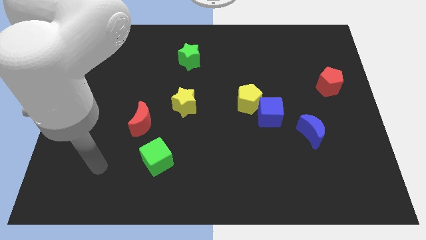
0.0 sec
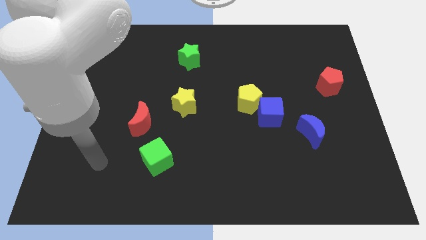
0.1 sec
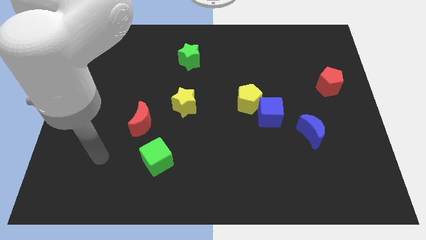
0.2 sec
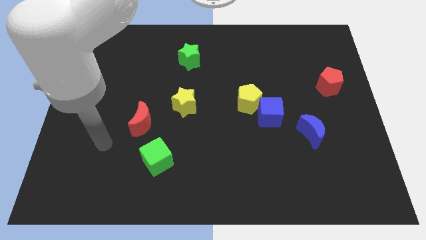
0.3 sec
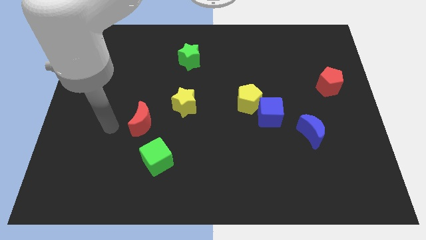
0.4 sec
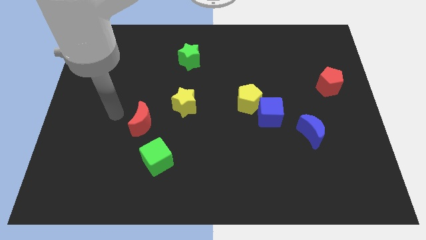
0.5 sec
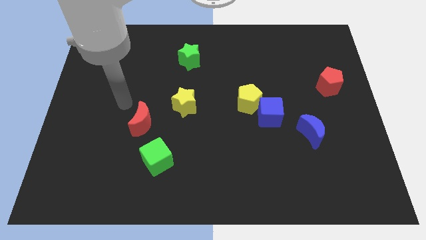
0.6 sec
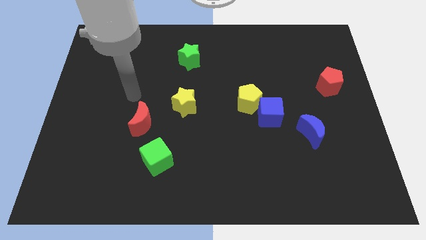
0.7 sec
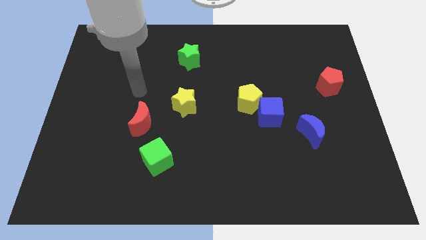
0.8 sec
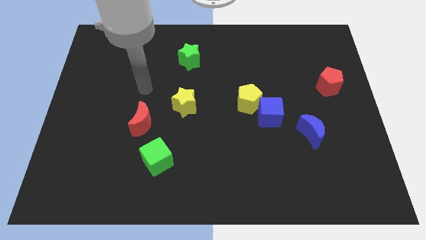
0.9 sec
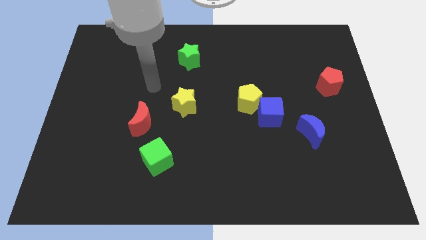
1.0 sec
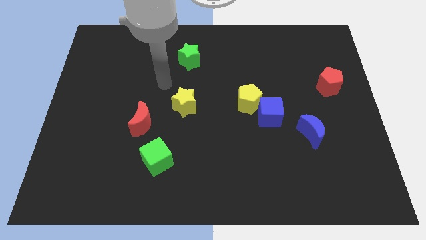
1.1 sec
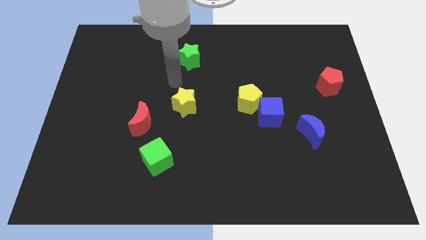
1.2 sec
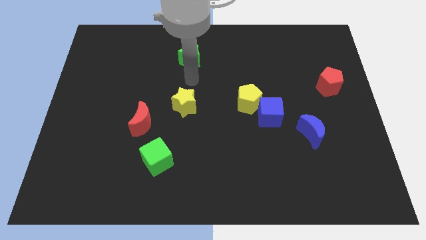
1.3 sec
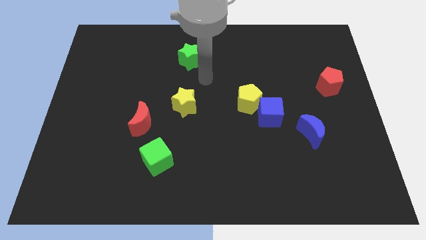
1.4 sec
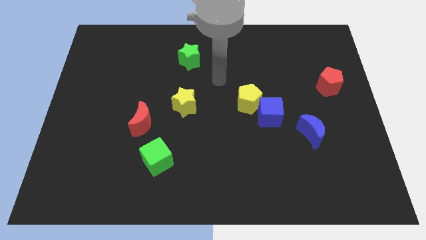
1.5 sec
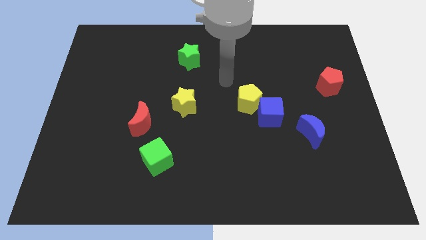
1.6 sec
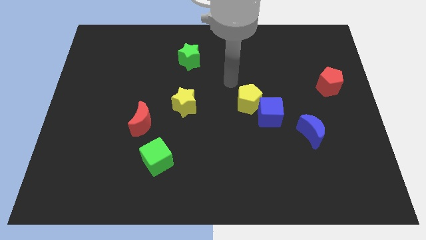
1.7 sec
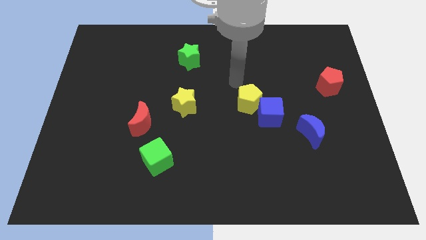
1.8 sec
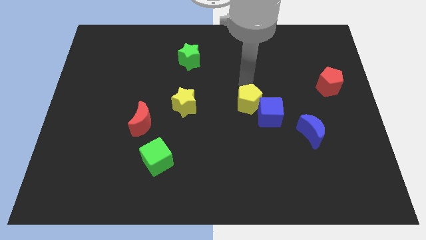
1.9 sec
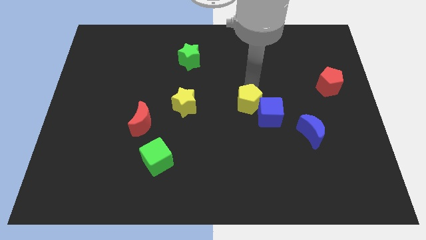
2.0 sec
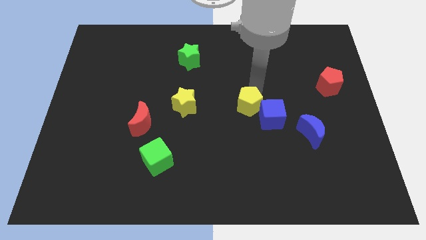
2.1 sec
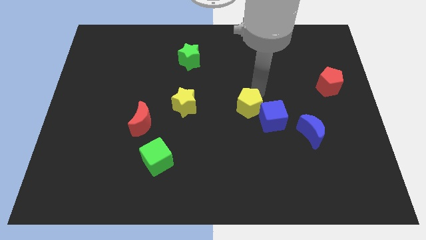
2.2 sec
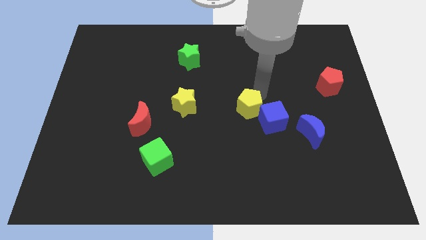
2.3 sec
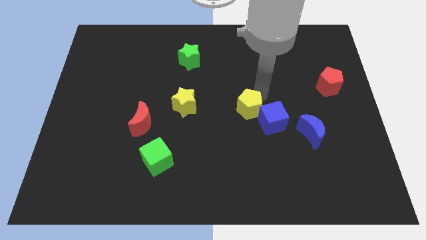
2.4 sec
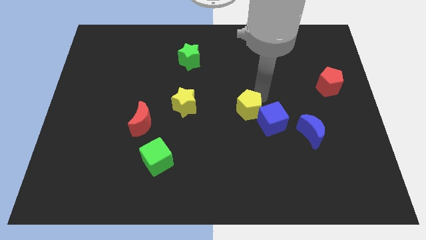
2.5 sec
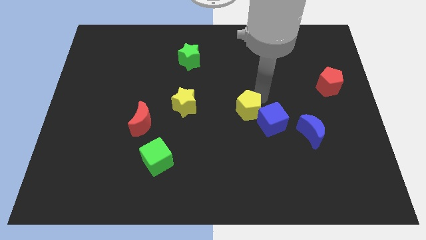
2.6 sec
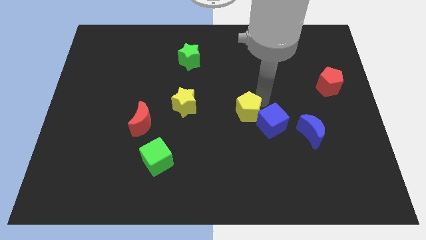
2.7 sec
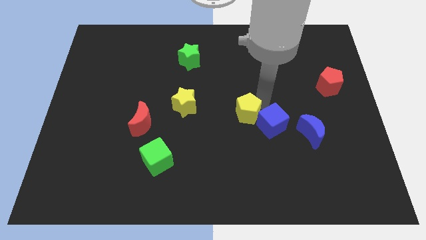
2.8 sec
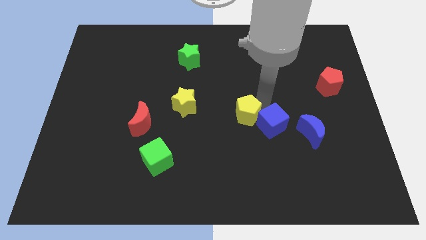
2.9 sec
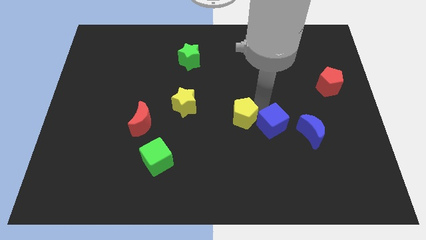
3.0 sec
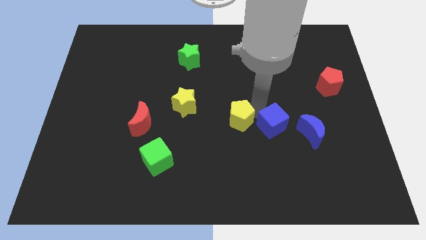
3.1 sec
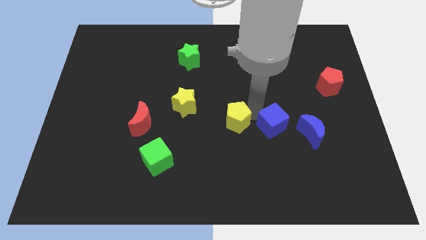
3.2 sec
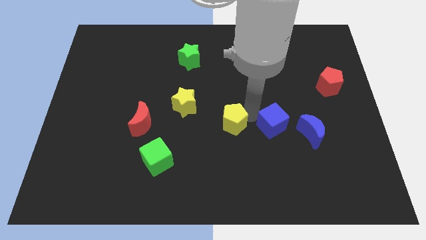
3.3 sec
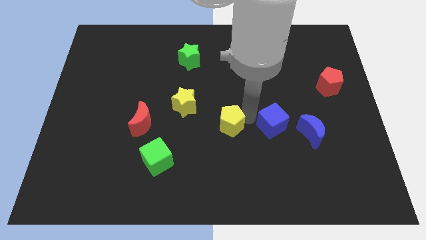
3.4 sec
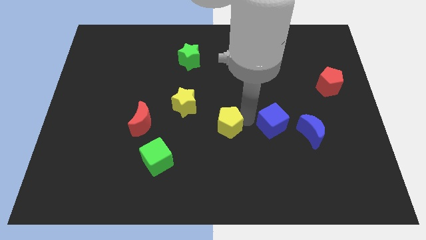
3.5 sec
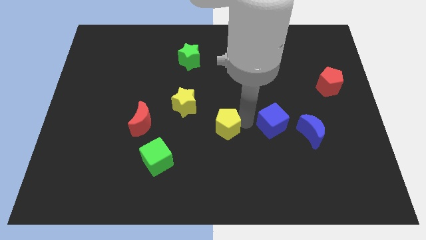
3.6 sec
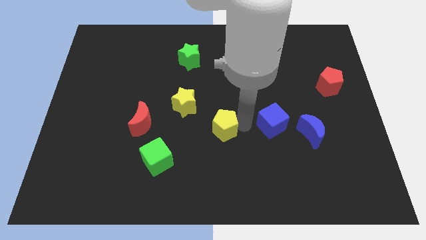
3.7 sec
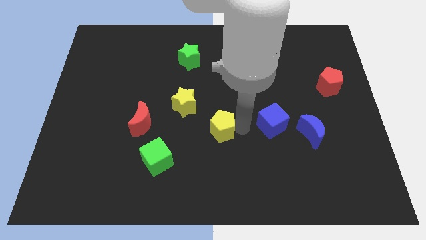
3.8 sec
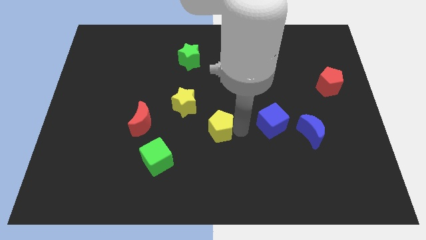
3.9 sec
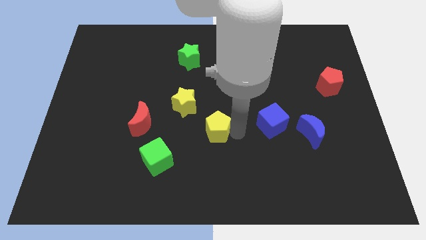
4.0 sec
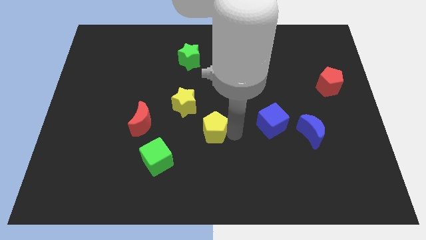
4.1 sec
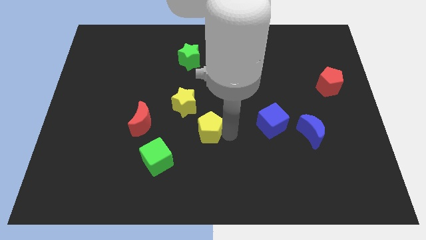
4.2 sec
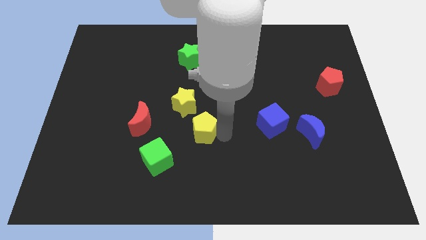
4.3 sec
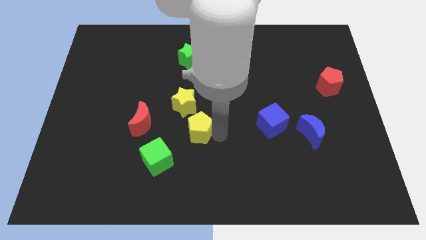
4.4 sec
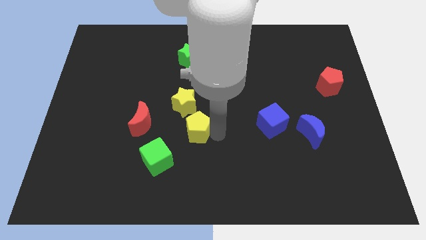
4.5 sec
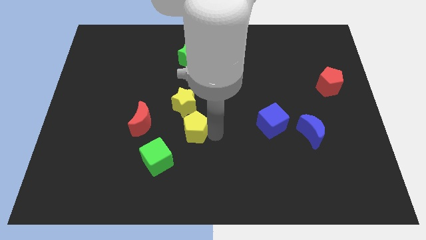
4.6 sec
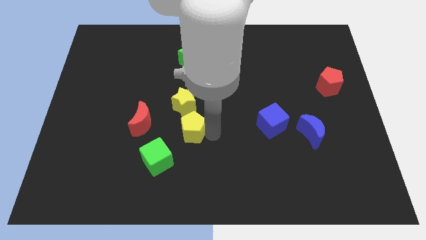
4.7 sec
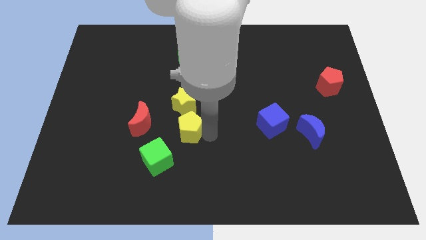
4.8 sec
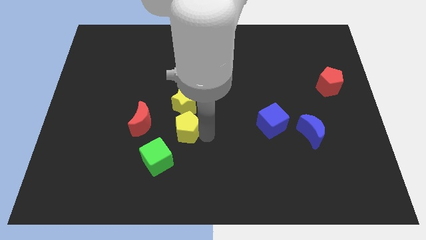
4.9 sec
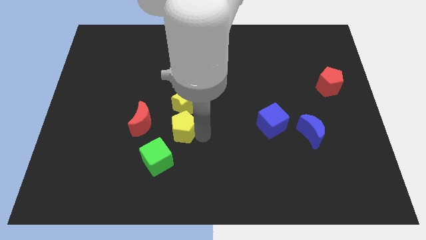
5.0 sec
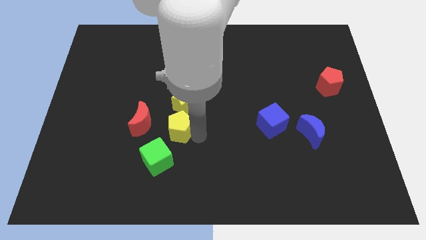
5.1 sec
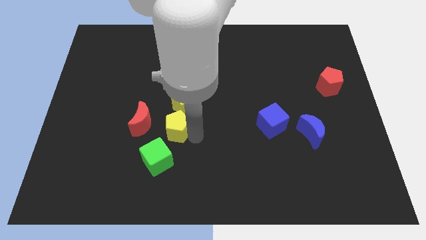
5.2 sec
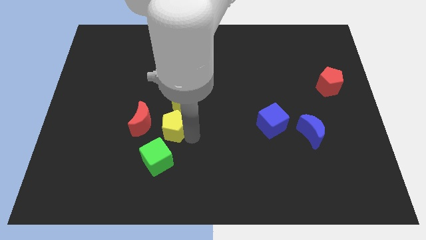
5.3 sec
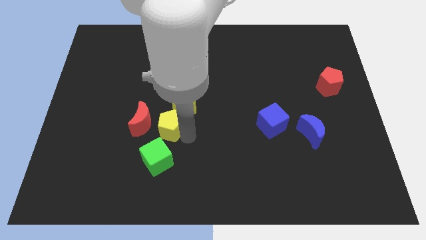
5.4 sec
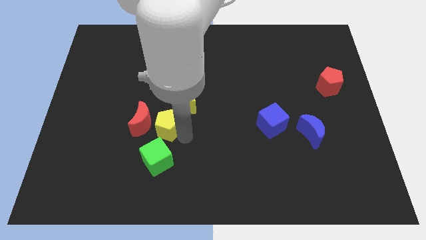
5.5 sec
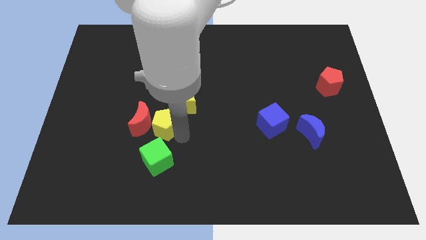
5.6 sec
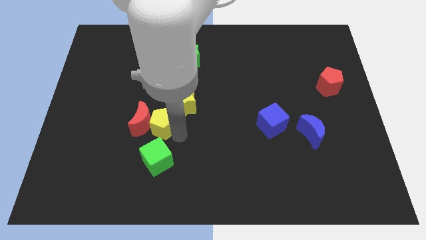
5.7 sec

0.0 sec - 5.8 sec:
move the yellow pentagon to the red moon

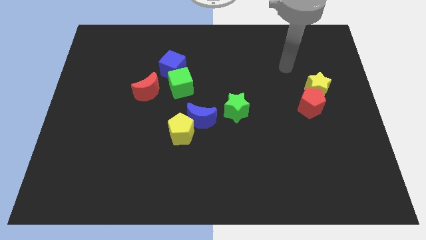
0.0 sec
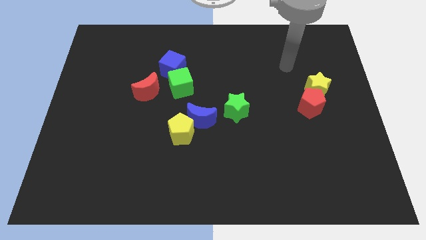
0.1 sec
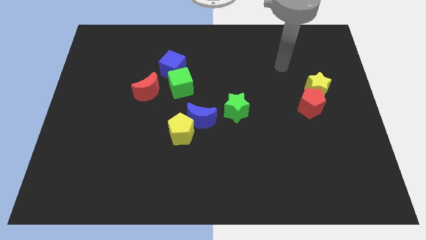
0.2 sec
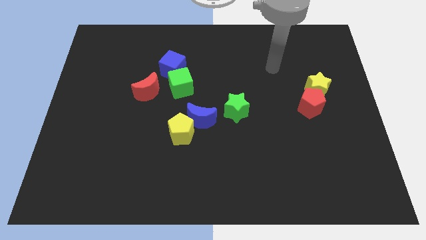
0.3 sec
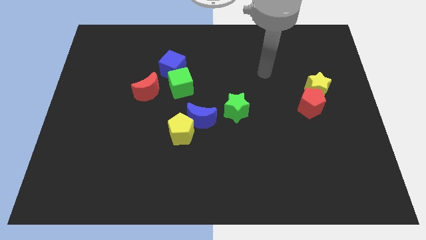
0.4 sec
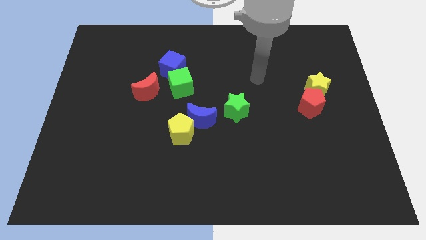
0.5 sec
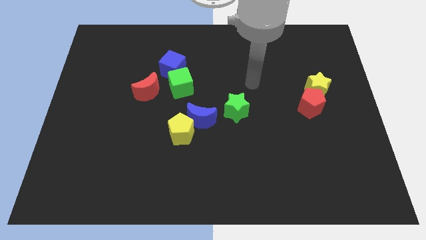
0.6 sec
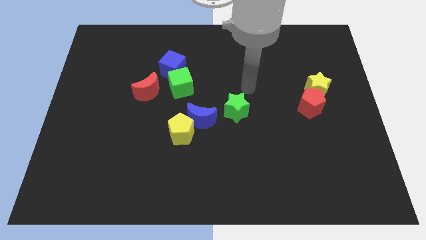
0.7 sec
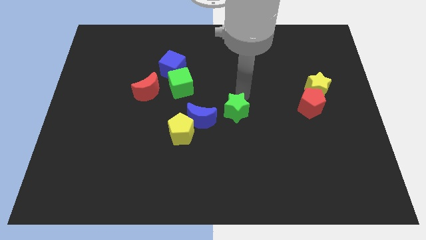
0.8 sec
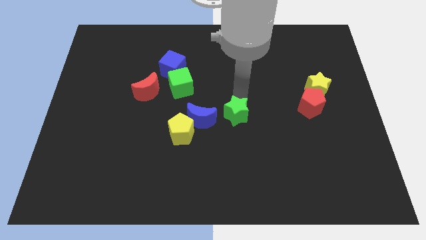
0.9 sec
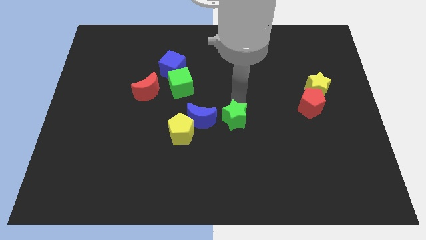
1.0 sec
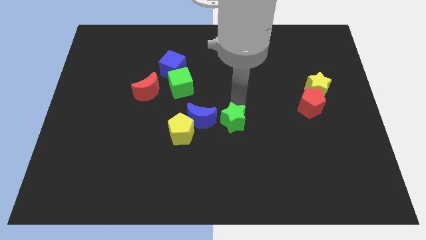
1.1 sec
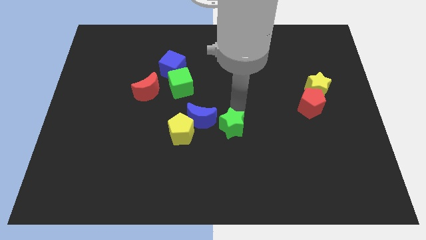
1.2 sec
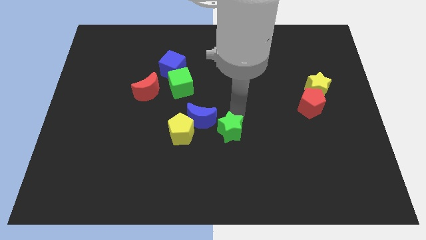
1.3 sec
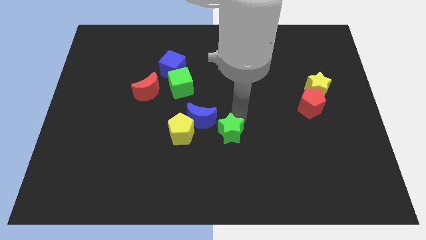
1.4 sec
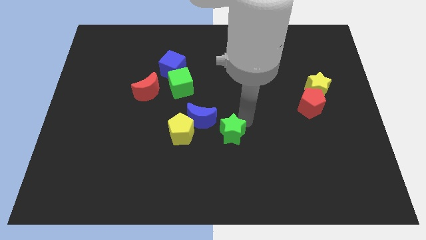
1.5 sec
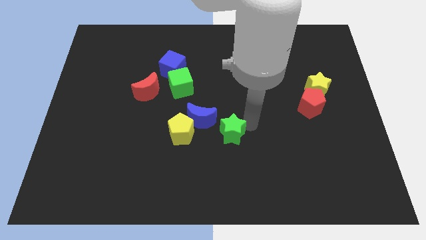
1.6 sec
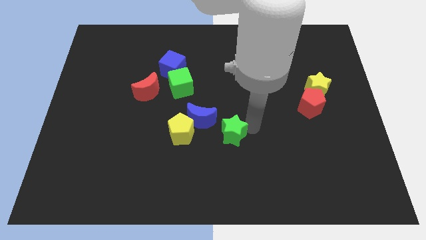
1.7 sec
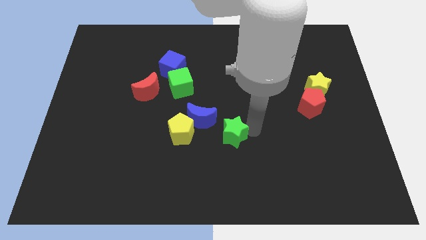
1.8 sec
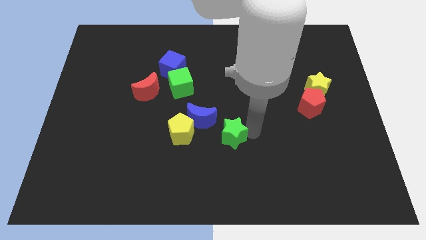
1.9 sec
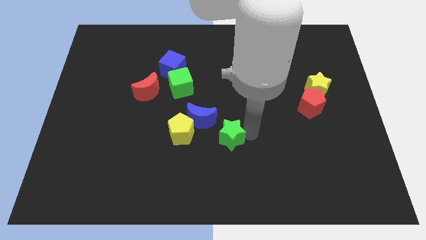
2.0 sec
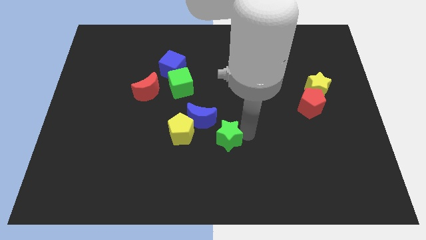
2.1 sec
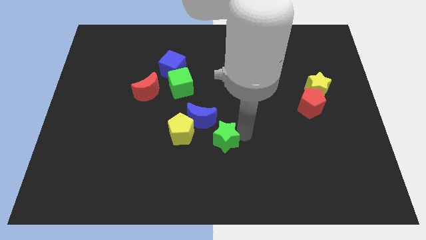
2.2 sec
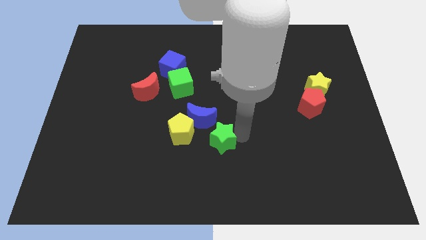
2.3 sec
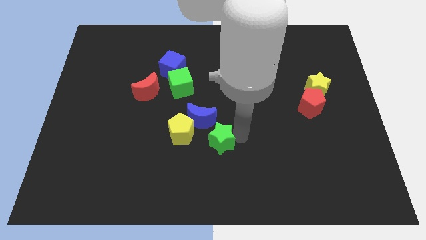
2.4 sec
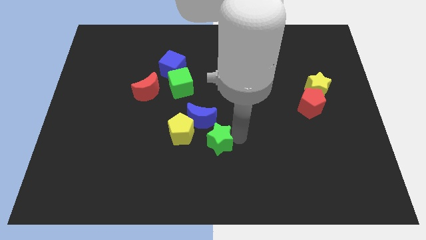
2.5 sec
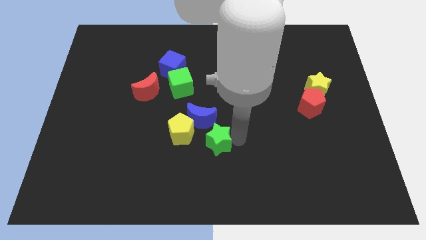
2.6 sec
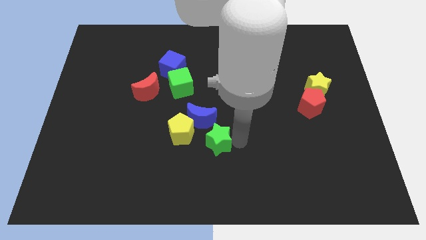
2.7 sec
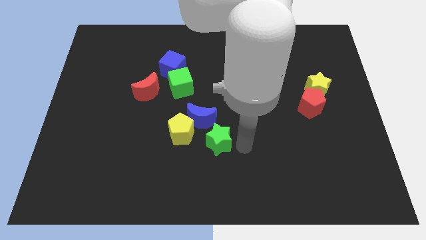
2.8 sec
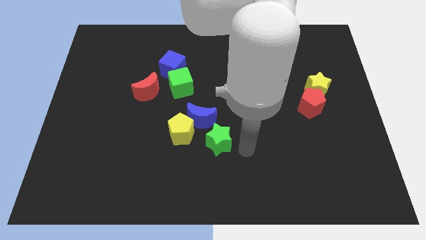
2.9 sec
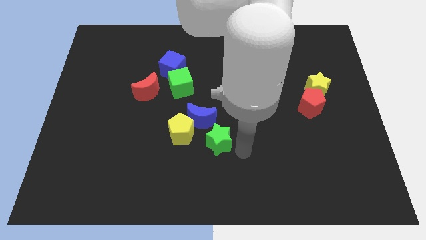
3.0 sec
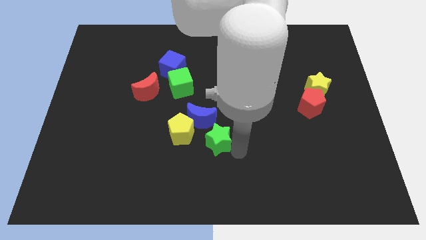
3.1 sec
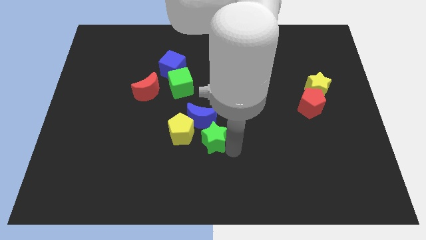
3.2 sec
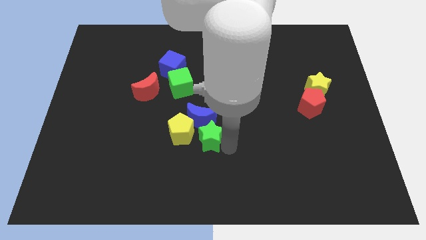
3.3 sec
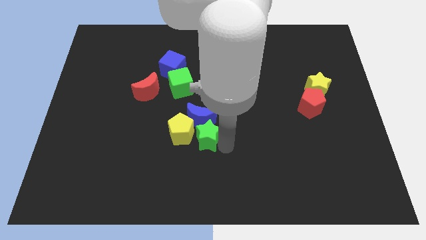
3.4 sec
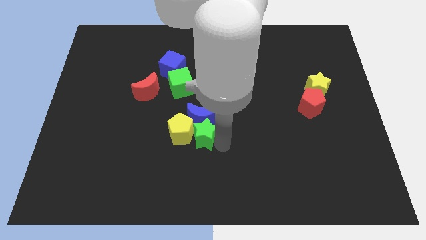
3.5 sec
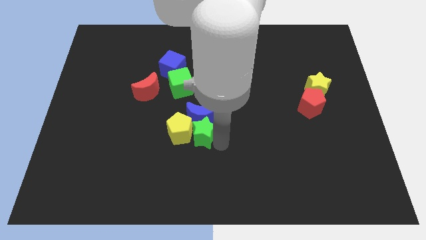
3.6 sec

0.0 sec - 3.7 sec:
slide the green star towards the yellow pentagon
